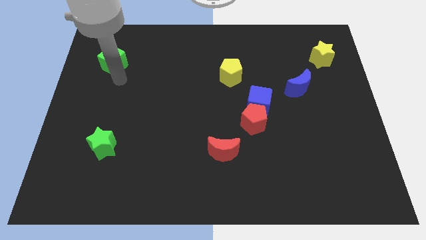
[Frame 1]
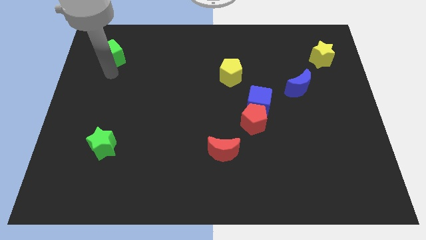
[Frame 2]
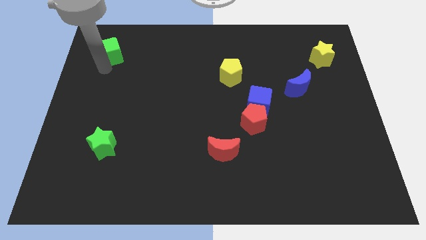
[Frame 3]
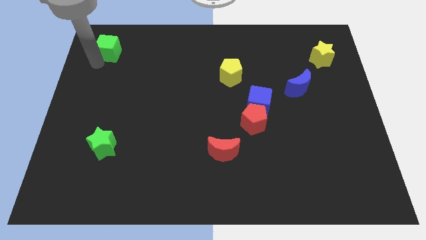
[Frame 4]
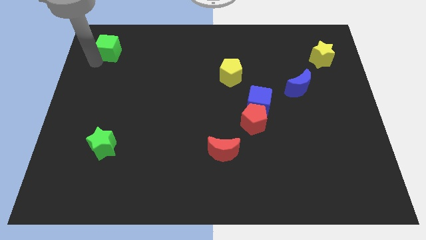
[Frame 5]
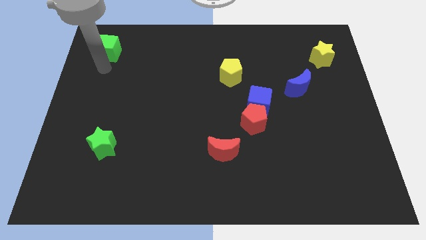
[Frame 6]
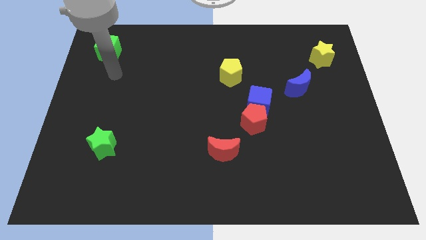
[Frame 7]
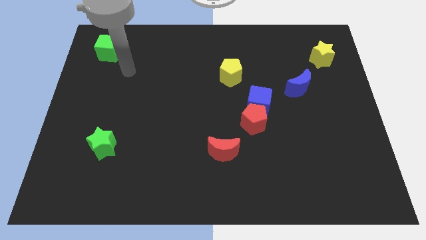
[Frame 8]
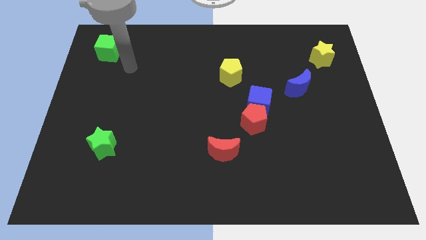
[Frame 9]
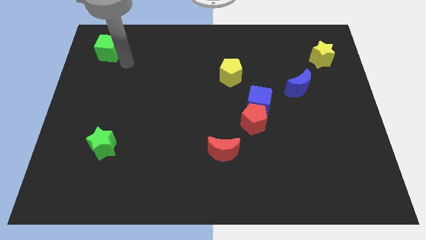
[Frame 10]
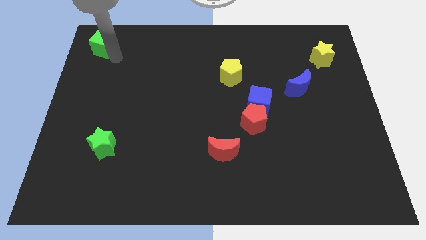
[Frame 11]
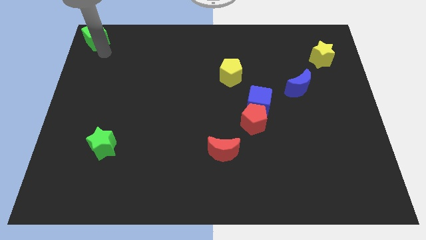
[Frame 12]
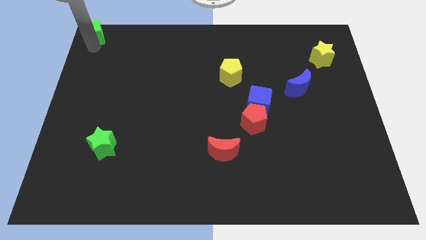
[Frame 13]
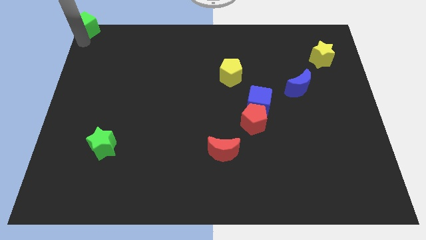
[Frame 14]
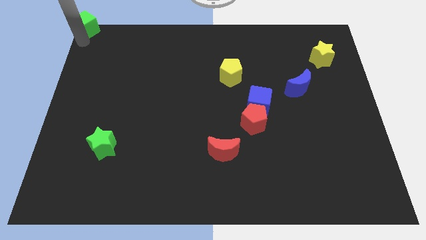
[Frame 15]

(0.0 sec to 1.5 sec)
place green cube towards top corner

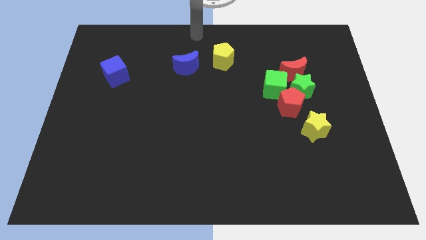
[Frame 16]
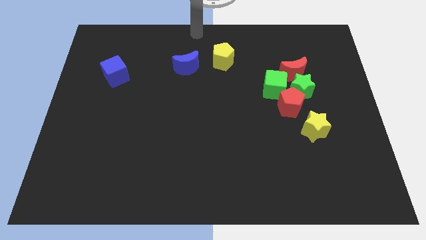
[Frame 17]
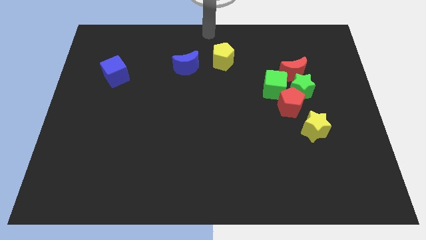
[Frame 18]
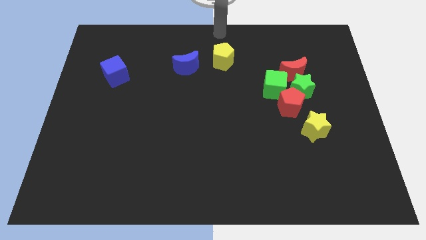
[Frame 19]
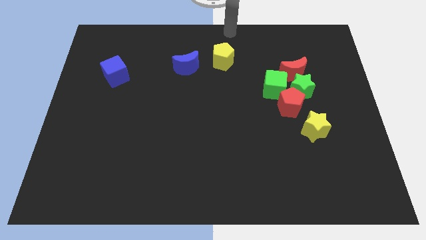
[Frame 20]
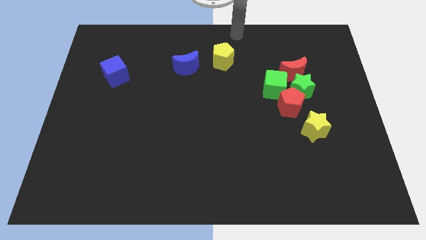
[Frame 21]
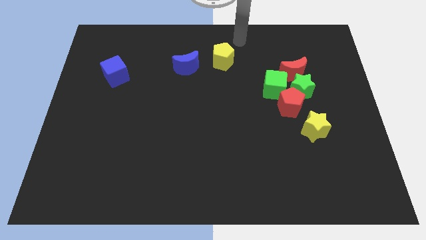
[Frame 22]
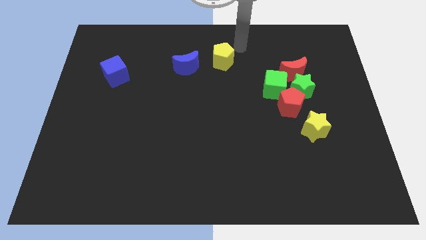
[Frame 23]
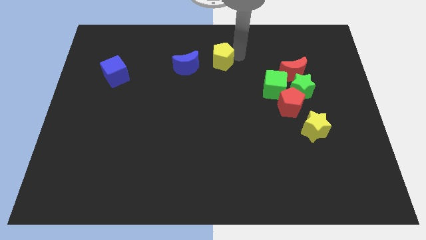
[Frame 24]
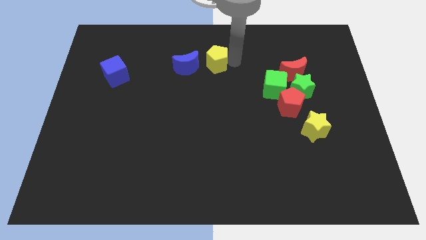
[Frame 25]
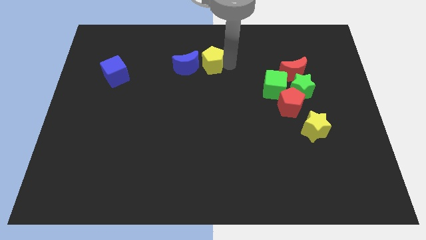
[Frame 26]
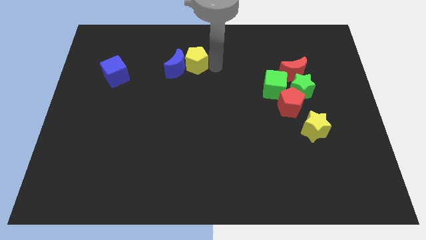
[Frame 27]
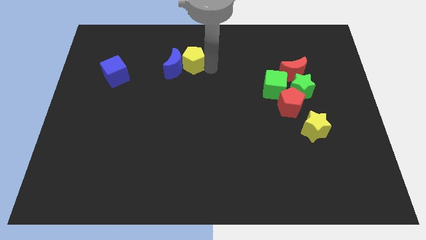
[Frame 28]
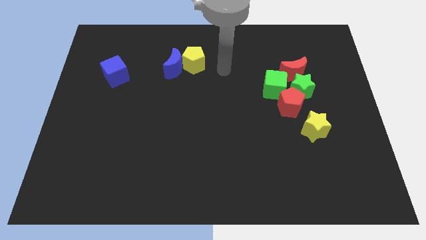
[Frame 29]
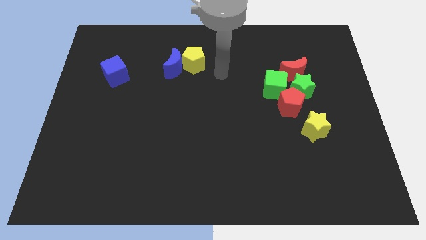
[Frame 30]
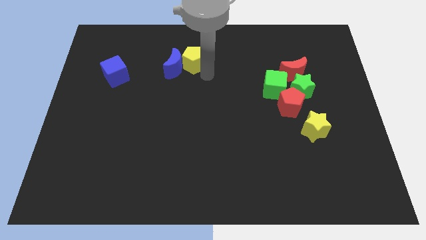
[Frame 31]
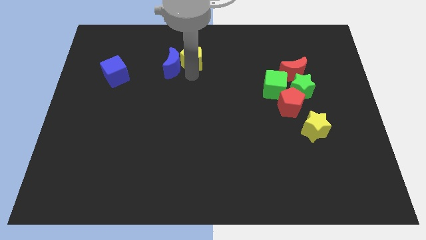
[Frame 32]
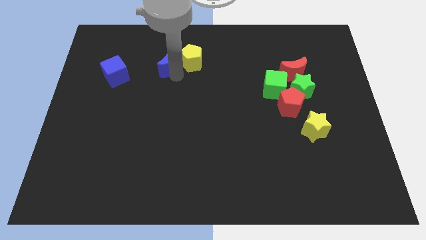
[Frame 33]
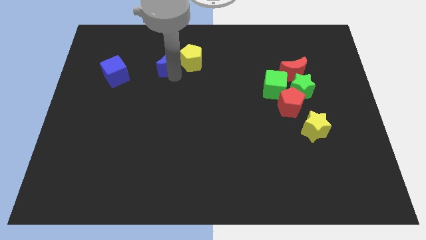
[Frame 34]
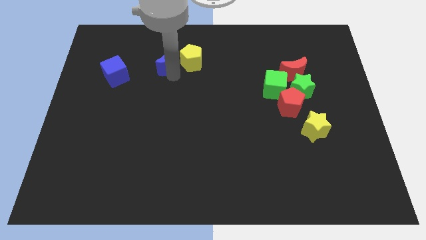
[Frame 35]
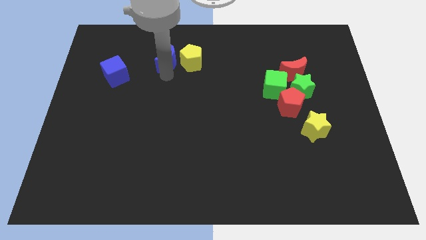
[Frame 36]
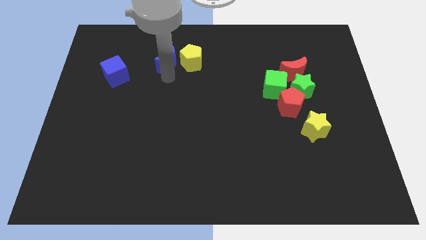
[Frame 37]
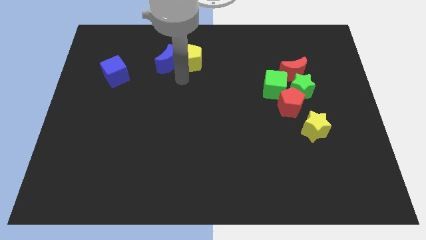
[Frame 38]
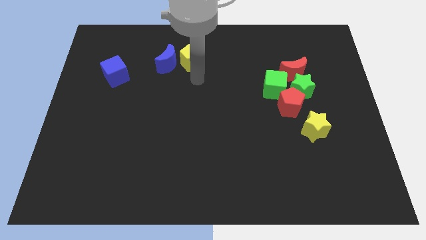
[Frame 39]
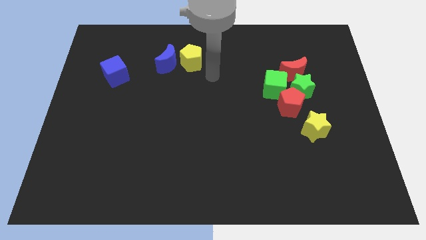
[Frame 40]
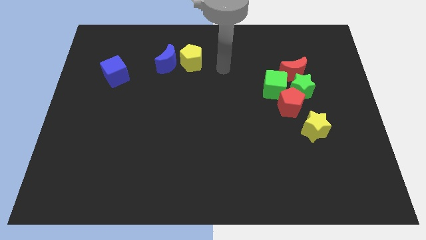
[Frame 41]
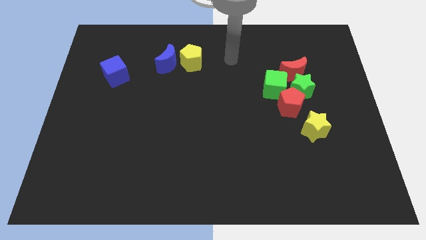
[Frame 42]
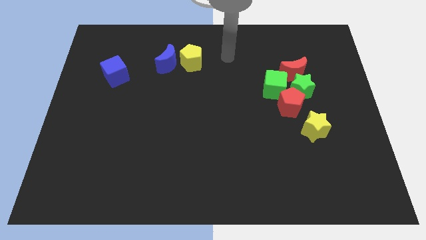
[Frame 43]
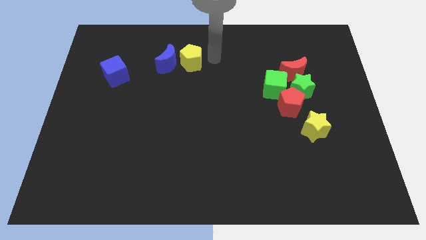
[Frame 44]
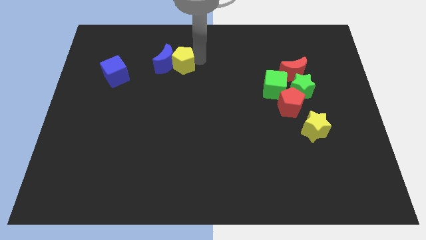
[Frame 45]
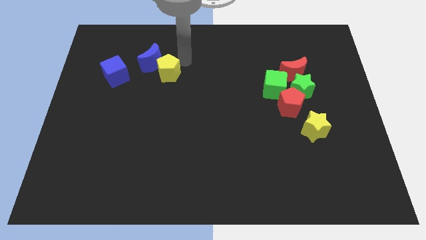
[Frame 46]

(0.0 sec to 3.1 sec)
move the yellow pentagon to the bottom right of the blue crescent

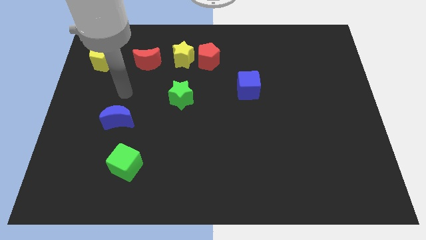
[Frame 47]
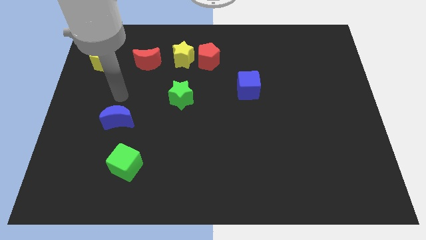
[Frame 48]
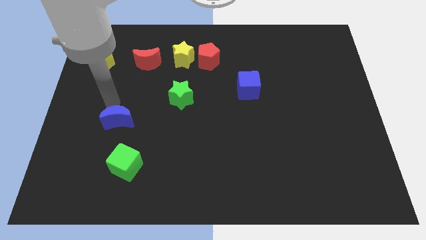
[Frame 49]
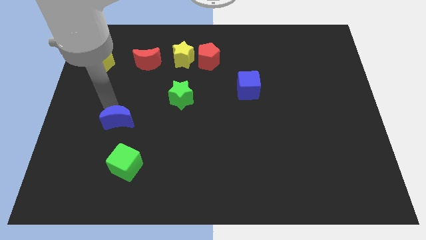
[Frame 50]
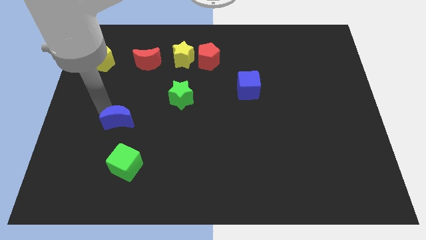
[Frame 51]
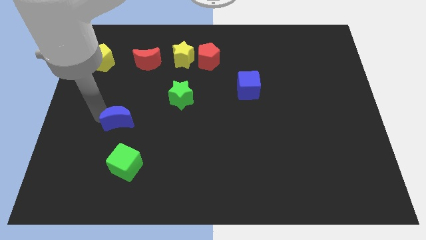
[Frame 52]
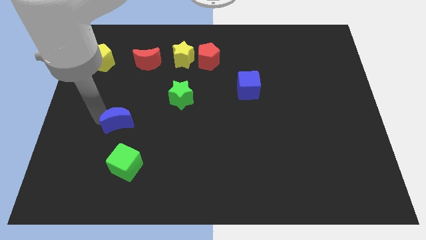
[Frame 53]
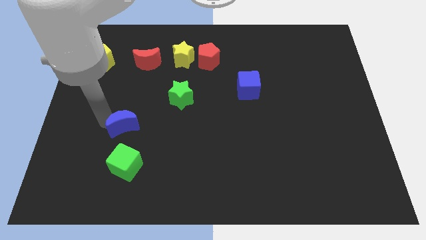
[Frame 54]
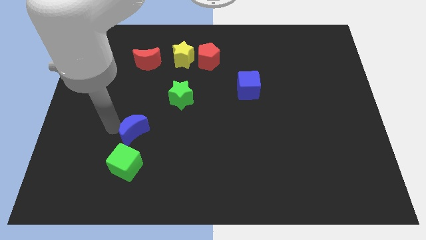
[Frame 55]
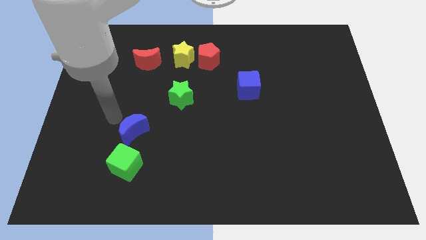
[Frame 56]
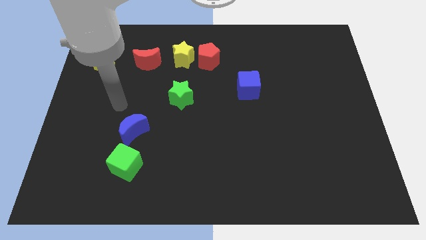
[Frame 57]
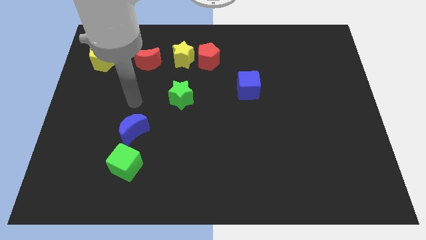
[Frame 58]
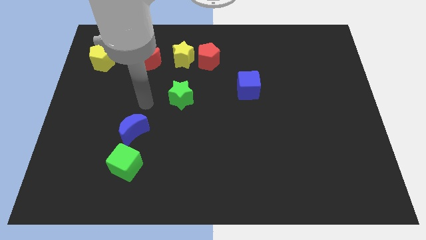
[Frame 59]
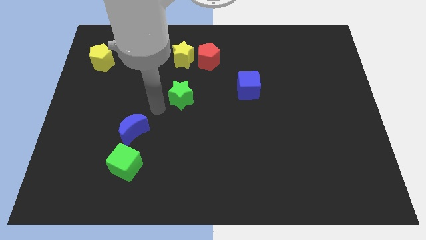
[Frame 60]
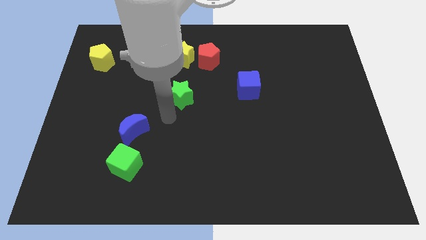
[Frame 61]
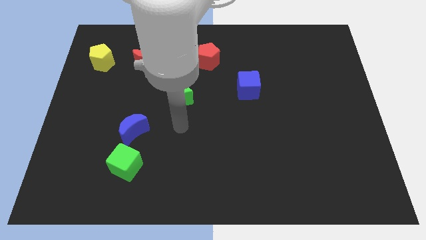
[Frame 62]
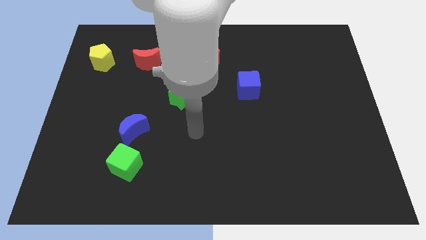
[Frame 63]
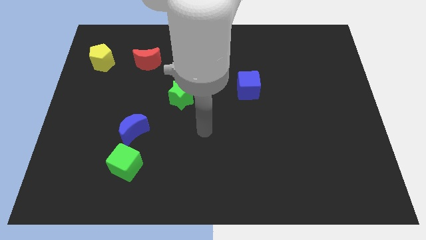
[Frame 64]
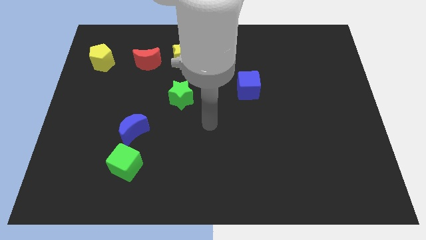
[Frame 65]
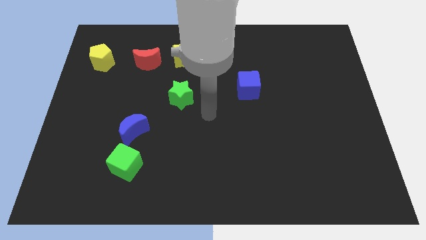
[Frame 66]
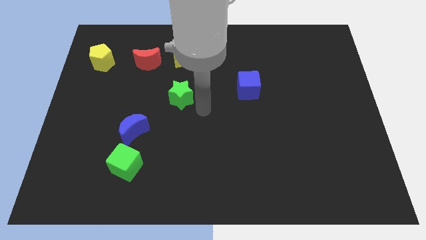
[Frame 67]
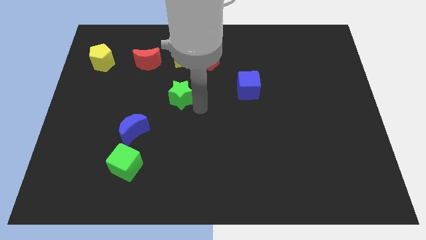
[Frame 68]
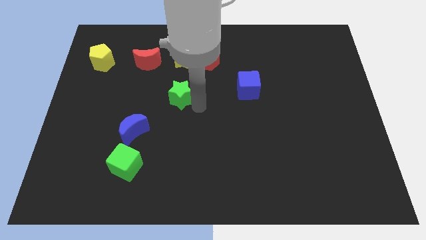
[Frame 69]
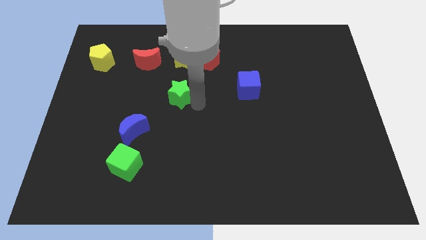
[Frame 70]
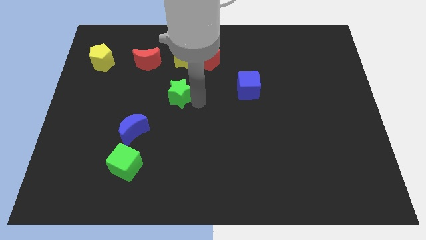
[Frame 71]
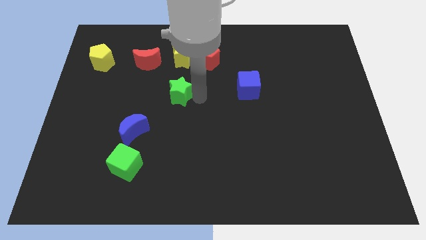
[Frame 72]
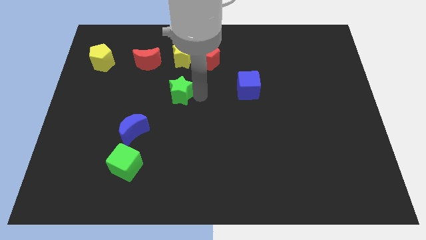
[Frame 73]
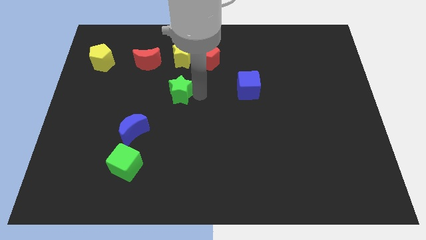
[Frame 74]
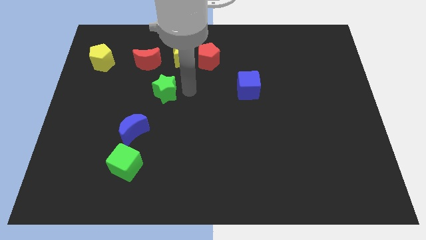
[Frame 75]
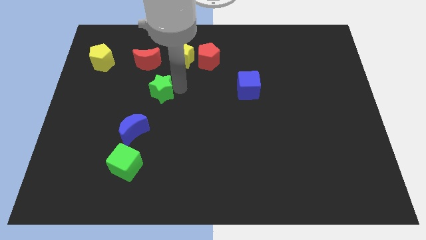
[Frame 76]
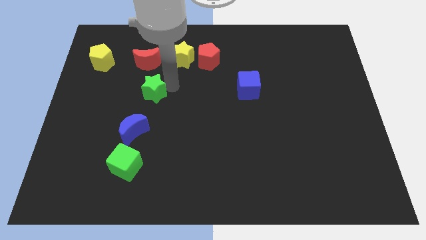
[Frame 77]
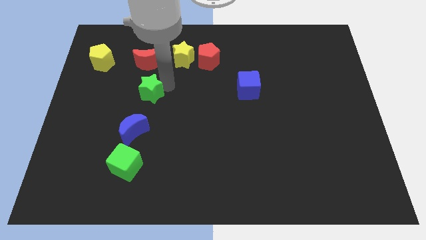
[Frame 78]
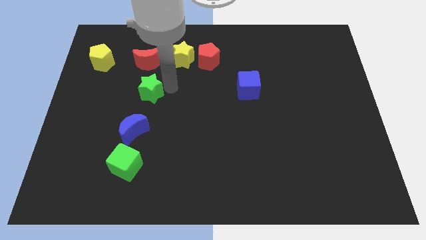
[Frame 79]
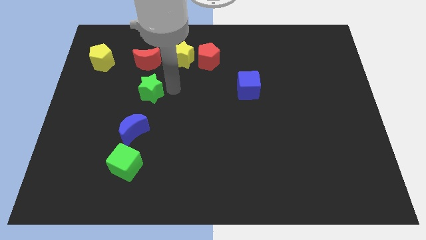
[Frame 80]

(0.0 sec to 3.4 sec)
drag the green star to the bottom of the red moon

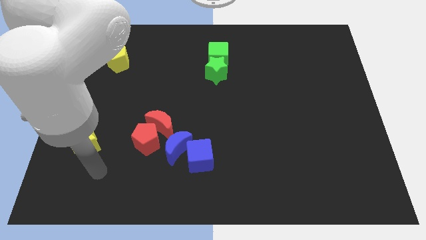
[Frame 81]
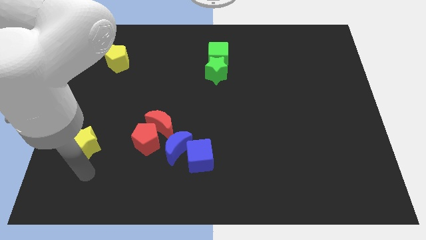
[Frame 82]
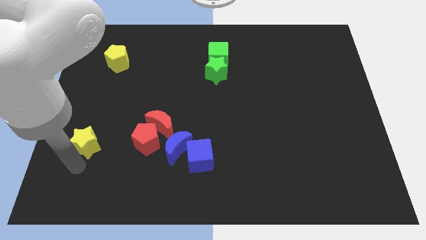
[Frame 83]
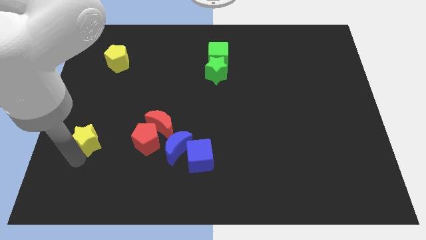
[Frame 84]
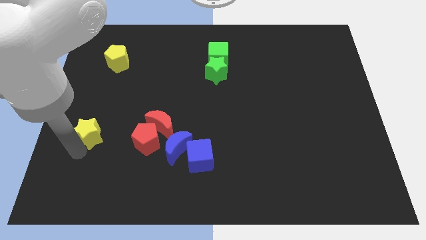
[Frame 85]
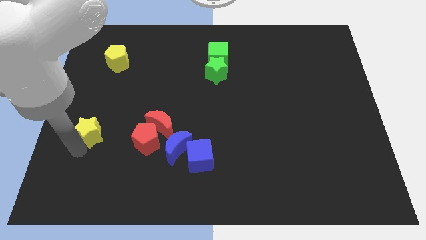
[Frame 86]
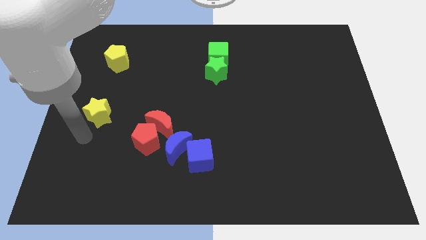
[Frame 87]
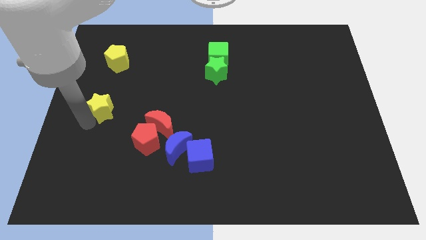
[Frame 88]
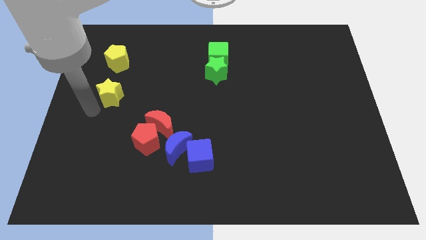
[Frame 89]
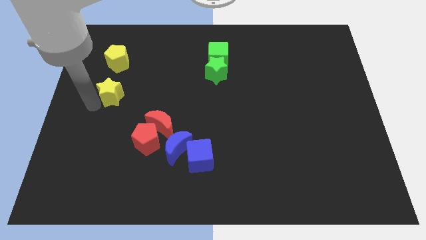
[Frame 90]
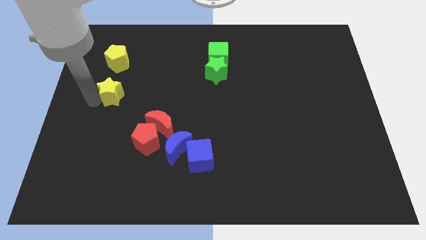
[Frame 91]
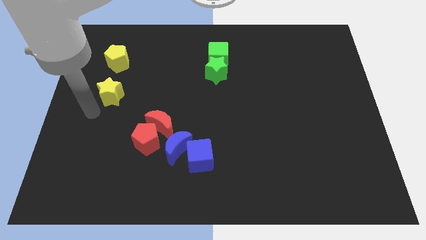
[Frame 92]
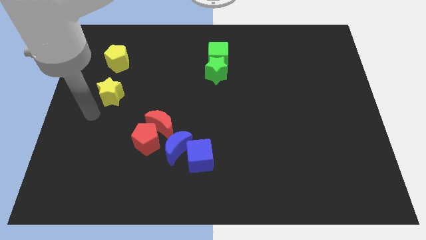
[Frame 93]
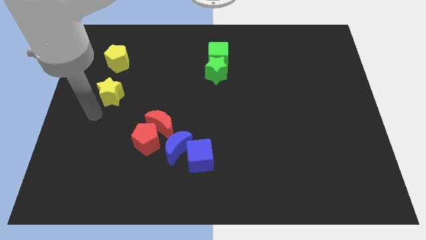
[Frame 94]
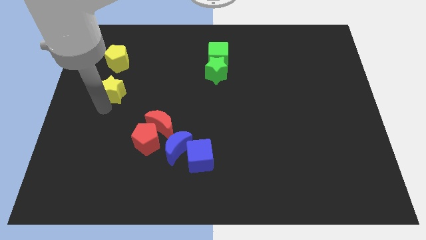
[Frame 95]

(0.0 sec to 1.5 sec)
place the yellow star vertically towards the bottom of the yellow pentagon
